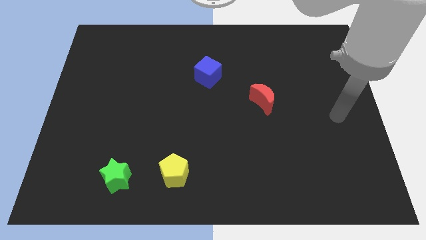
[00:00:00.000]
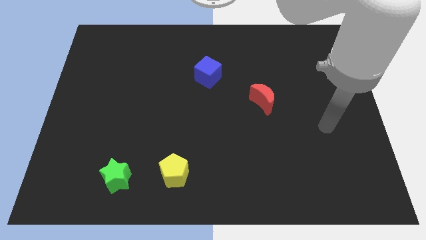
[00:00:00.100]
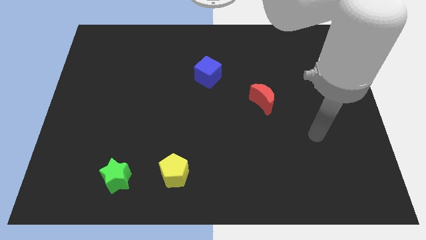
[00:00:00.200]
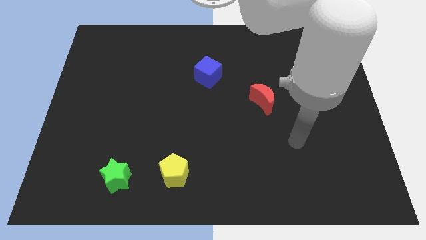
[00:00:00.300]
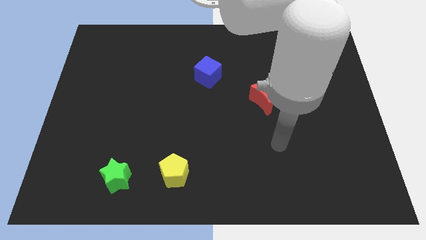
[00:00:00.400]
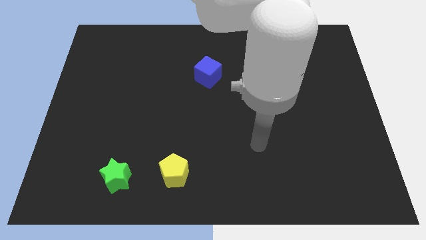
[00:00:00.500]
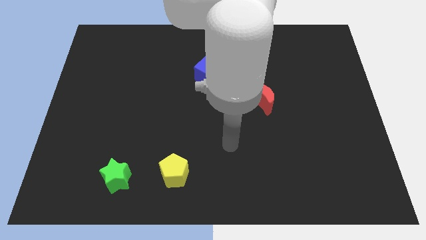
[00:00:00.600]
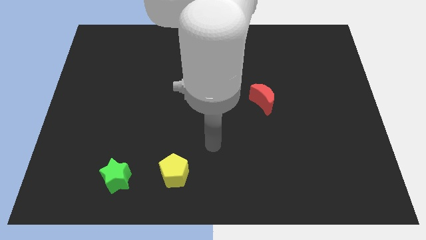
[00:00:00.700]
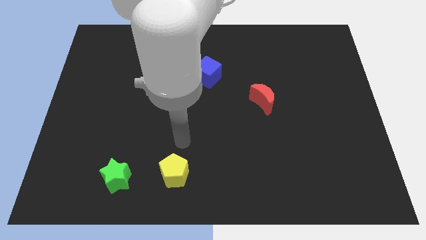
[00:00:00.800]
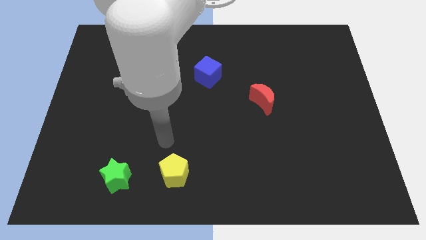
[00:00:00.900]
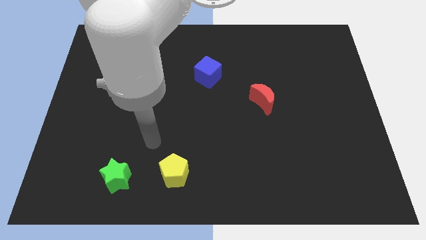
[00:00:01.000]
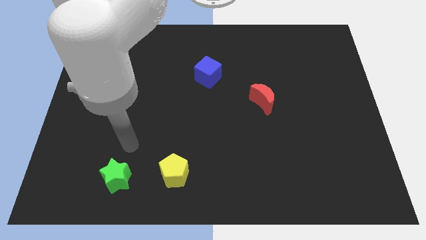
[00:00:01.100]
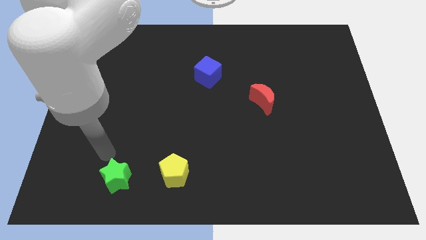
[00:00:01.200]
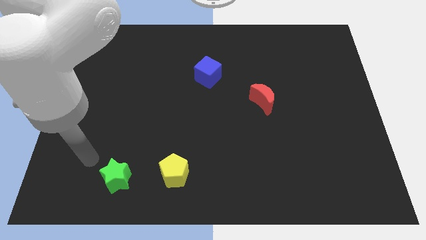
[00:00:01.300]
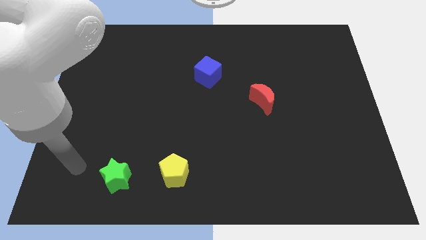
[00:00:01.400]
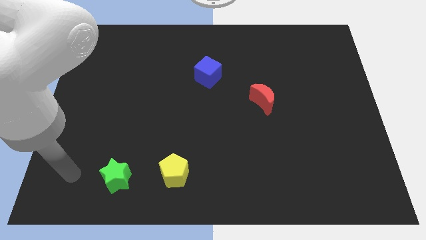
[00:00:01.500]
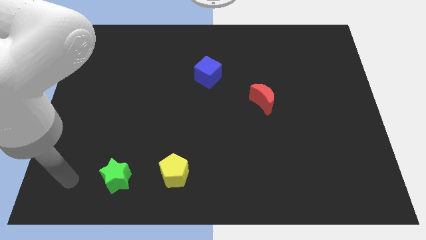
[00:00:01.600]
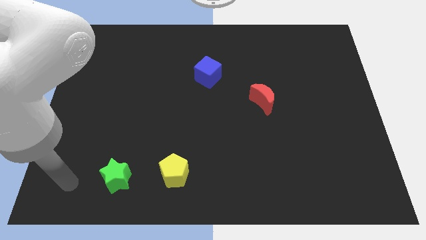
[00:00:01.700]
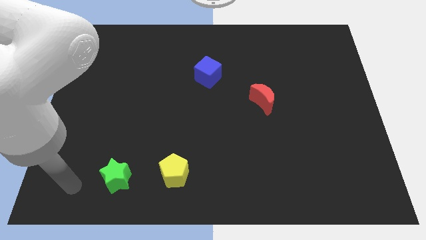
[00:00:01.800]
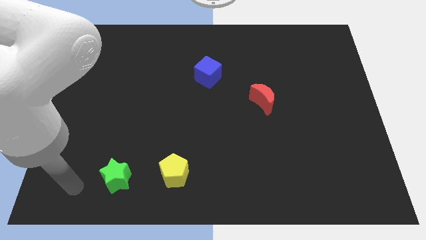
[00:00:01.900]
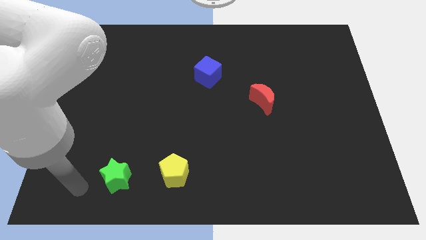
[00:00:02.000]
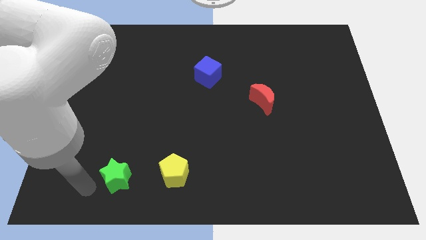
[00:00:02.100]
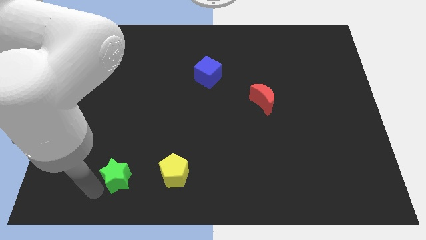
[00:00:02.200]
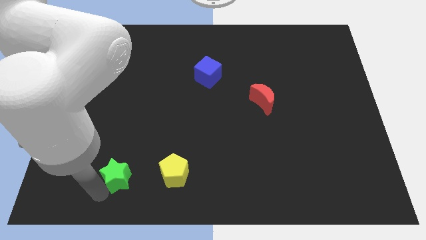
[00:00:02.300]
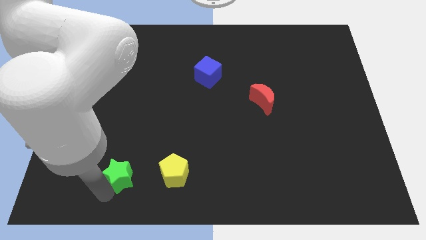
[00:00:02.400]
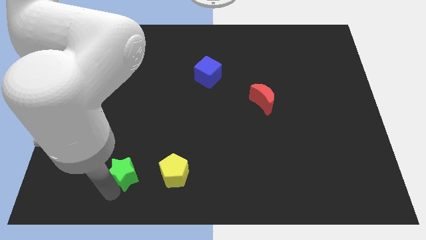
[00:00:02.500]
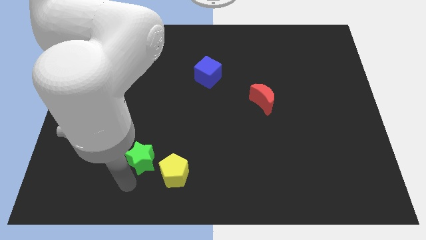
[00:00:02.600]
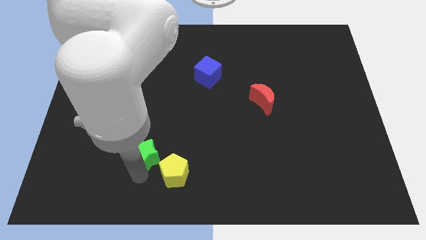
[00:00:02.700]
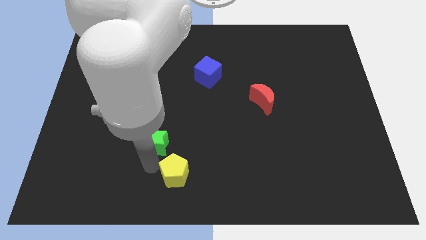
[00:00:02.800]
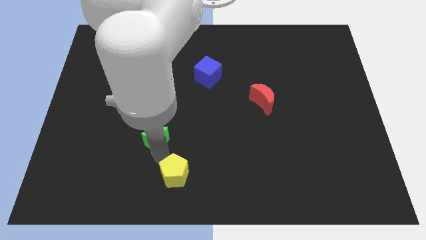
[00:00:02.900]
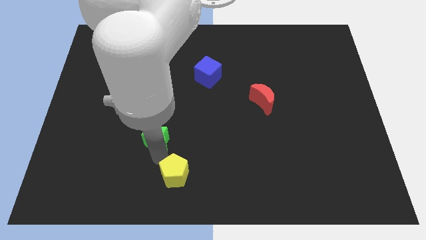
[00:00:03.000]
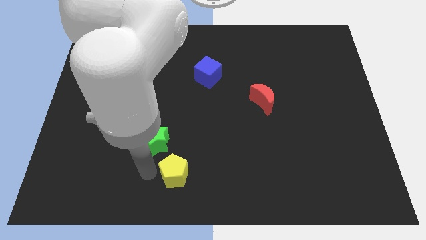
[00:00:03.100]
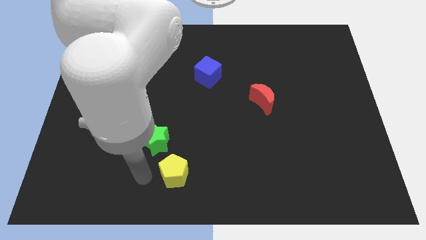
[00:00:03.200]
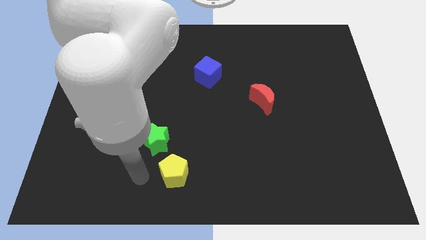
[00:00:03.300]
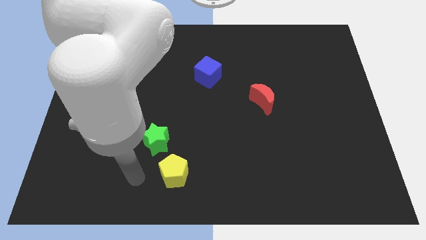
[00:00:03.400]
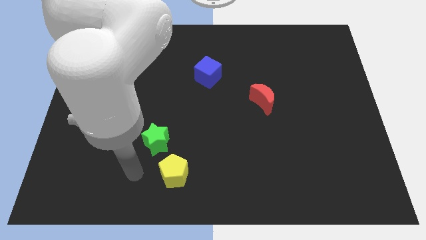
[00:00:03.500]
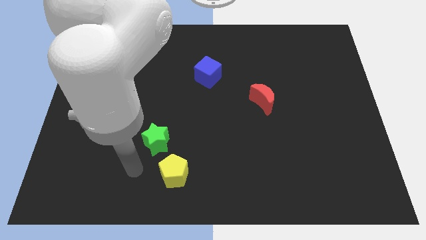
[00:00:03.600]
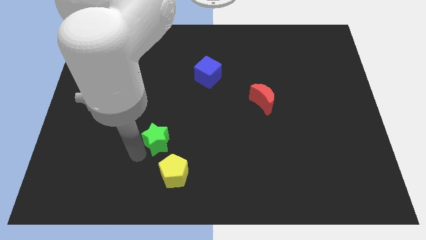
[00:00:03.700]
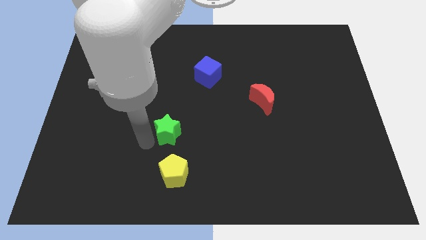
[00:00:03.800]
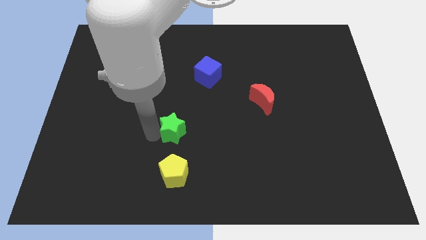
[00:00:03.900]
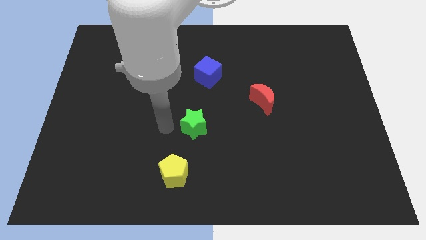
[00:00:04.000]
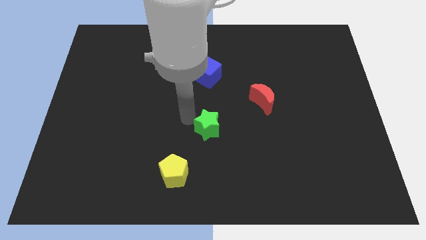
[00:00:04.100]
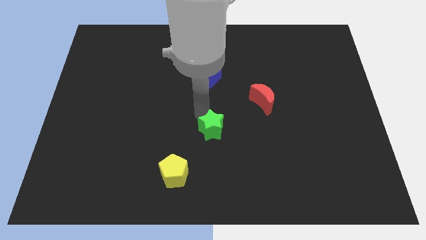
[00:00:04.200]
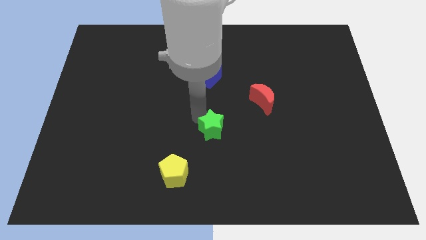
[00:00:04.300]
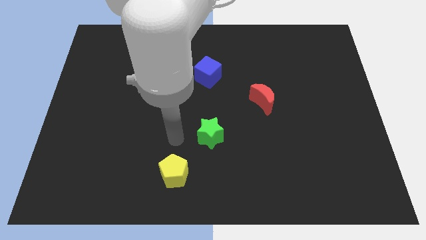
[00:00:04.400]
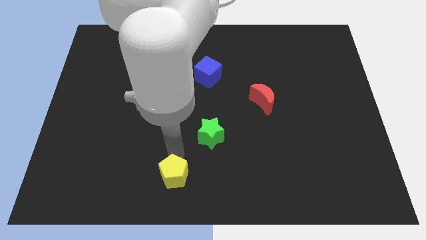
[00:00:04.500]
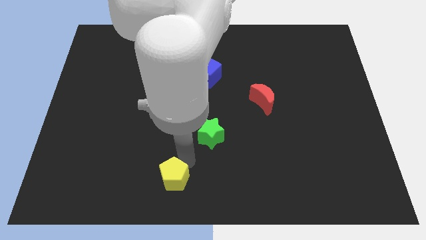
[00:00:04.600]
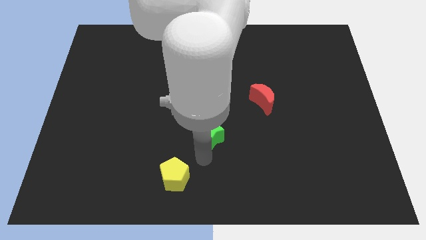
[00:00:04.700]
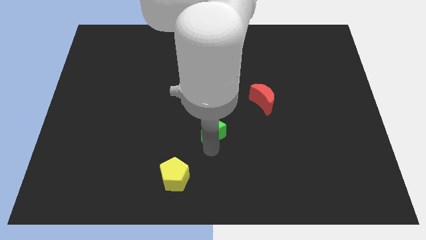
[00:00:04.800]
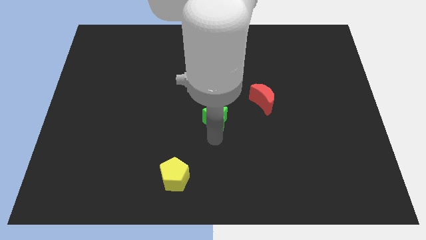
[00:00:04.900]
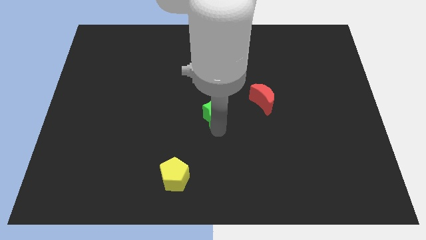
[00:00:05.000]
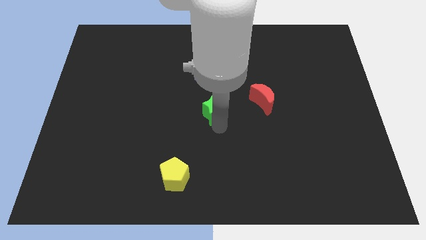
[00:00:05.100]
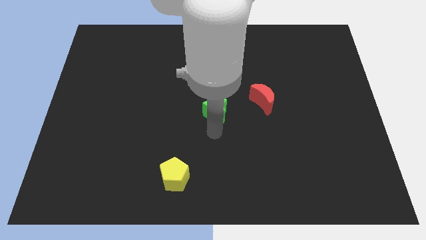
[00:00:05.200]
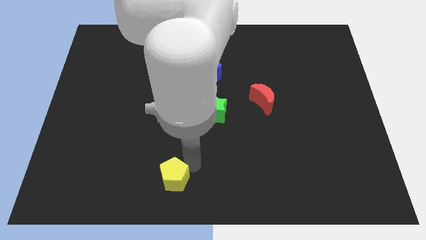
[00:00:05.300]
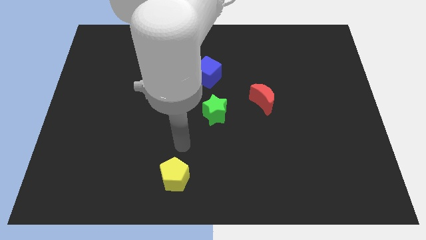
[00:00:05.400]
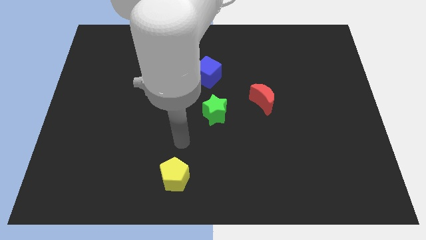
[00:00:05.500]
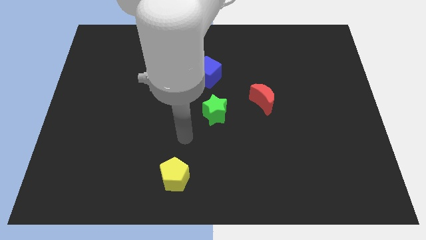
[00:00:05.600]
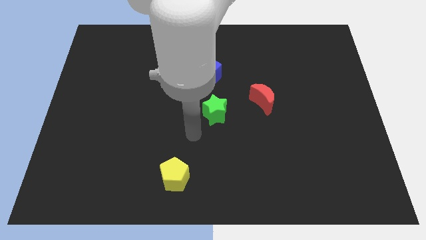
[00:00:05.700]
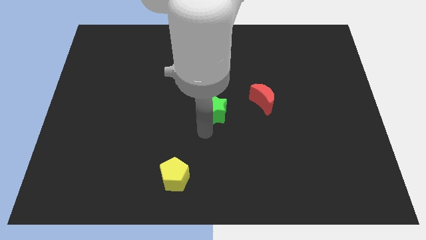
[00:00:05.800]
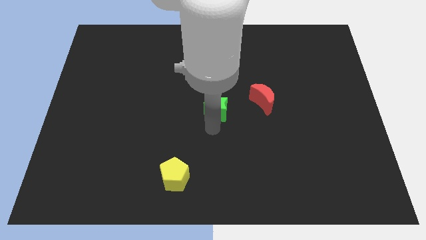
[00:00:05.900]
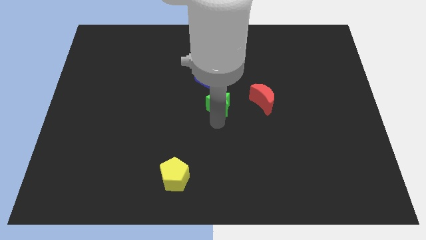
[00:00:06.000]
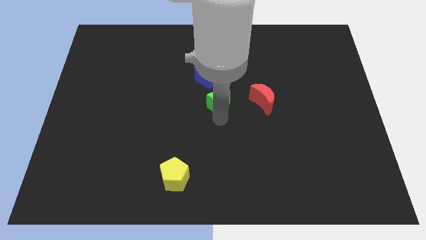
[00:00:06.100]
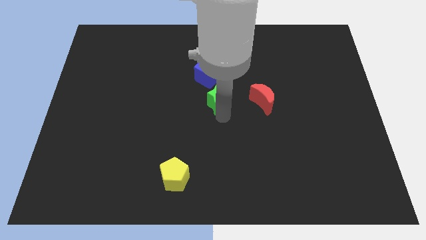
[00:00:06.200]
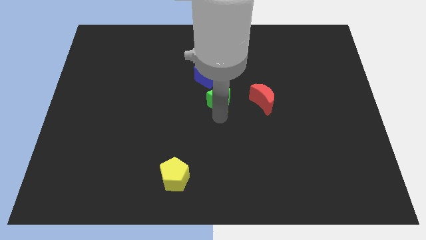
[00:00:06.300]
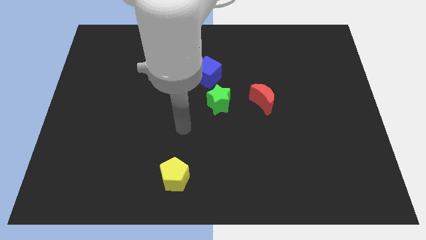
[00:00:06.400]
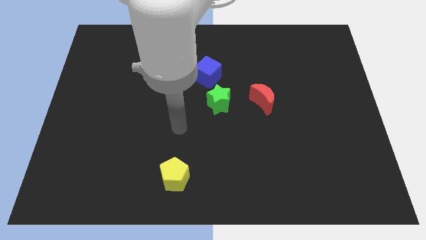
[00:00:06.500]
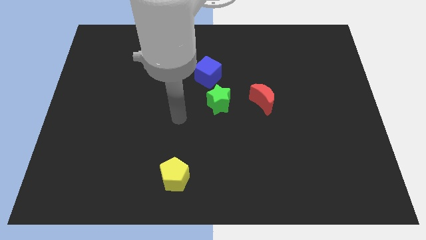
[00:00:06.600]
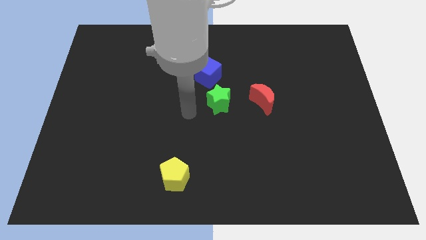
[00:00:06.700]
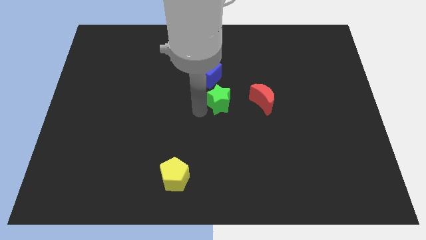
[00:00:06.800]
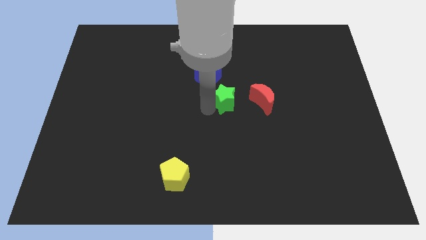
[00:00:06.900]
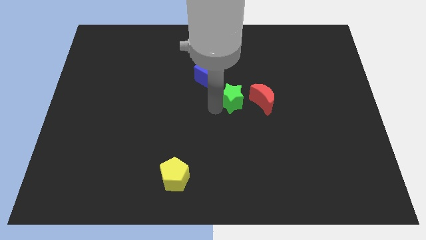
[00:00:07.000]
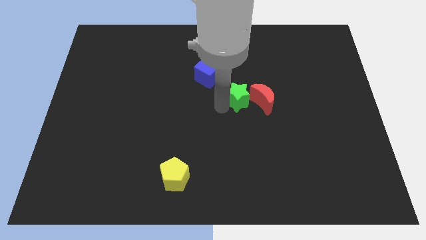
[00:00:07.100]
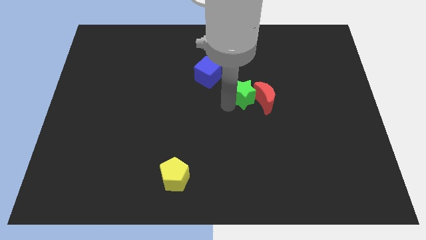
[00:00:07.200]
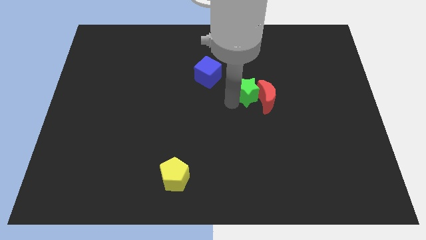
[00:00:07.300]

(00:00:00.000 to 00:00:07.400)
push the green block next to the red block

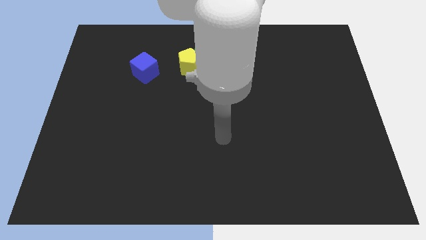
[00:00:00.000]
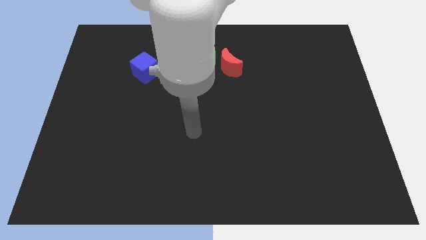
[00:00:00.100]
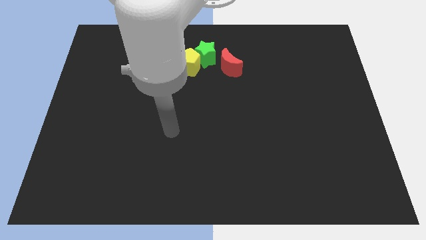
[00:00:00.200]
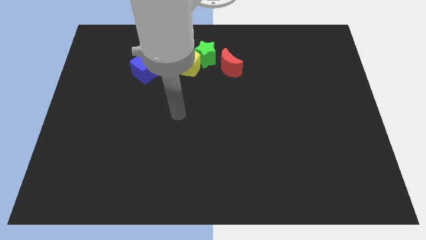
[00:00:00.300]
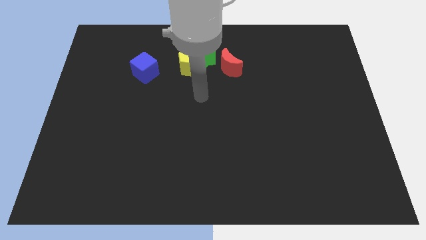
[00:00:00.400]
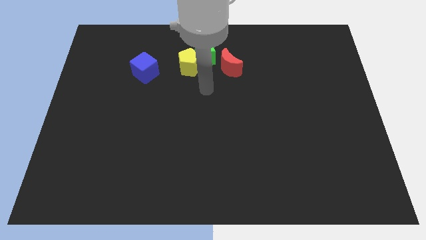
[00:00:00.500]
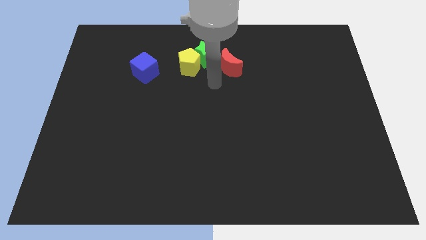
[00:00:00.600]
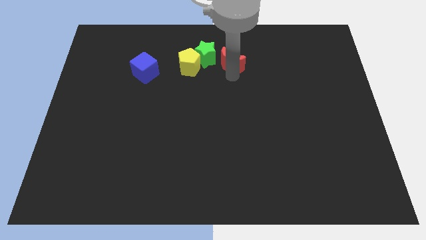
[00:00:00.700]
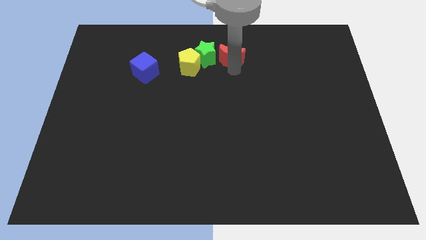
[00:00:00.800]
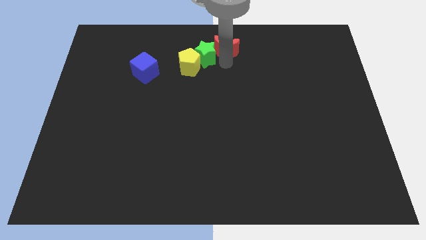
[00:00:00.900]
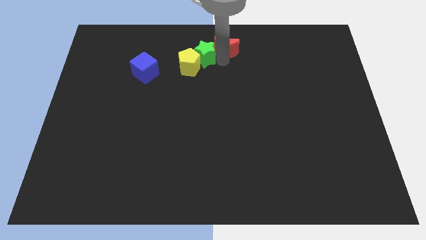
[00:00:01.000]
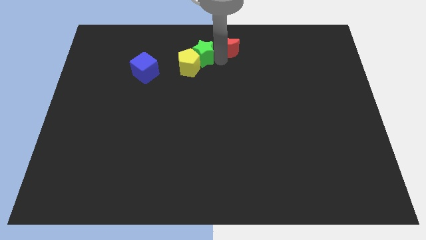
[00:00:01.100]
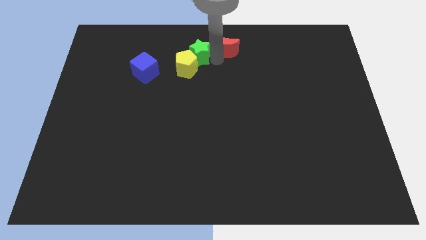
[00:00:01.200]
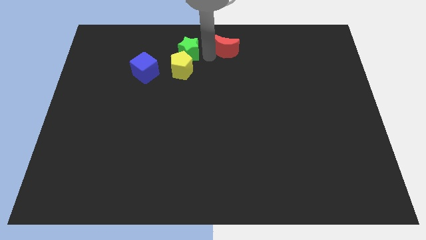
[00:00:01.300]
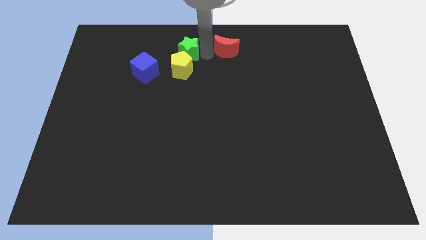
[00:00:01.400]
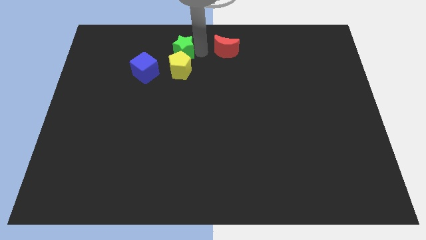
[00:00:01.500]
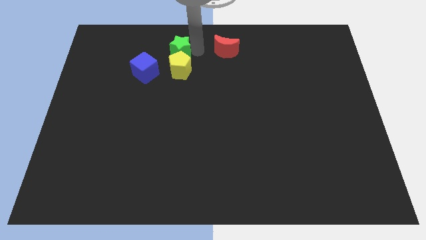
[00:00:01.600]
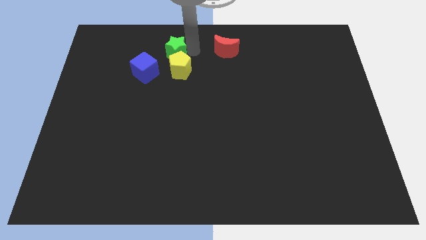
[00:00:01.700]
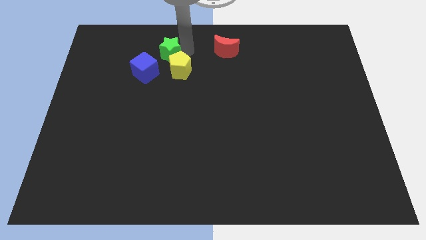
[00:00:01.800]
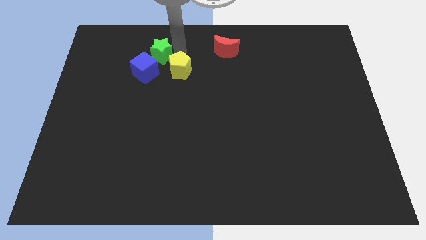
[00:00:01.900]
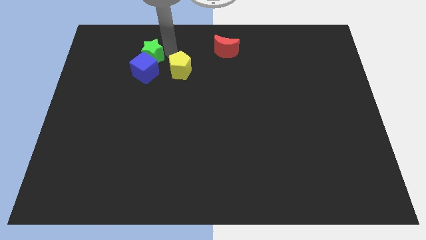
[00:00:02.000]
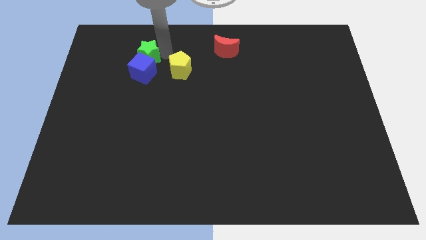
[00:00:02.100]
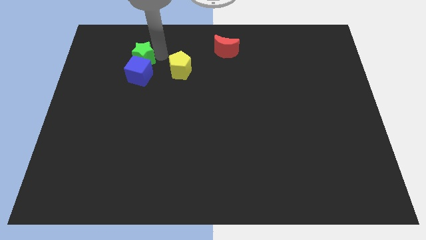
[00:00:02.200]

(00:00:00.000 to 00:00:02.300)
slide the green star close to the blue block
